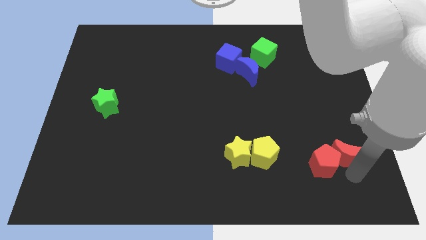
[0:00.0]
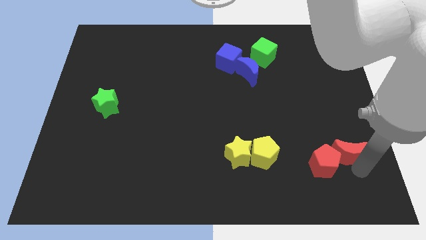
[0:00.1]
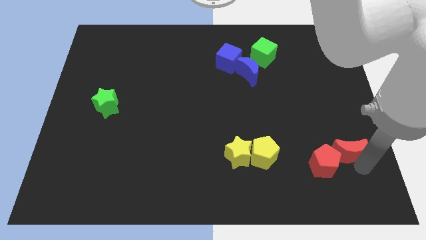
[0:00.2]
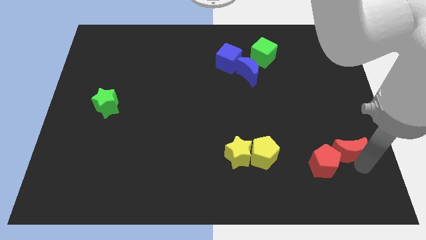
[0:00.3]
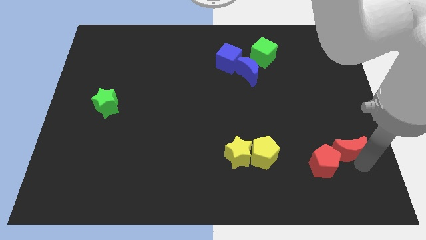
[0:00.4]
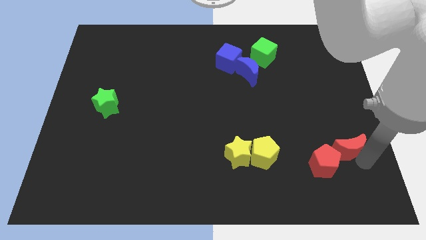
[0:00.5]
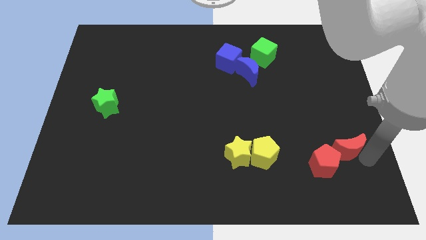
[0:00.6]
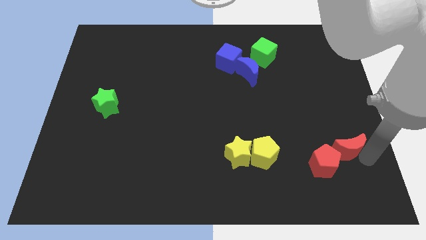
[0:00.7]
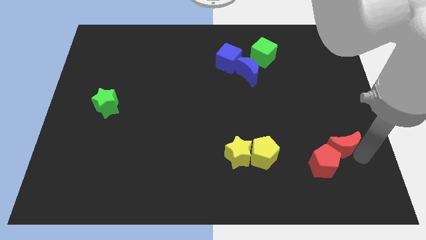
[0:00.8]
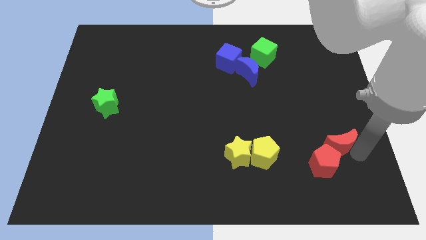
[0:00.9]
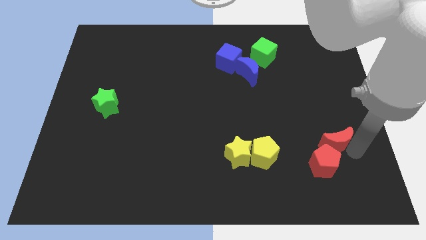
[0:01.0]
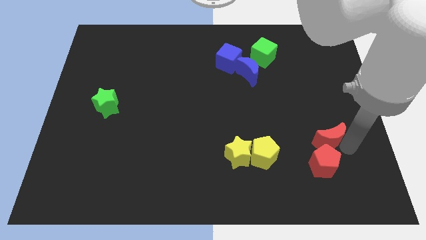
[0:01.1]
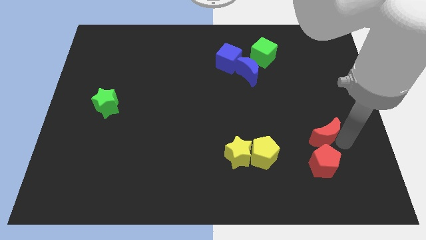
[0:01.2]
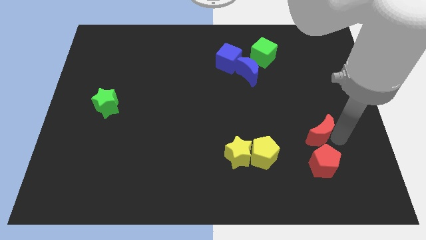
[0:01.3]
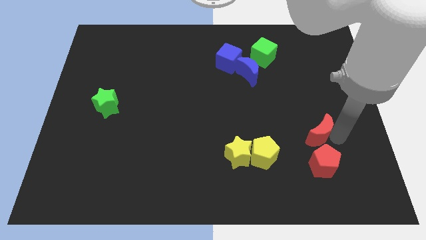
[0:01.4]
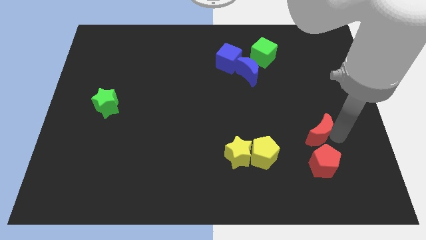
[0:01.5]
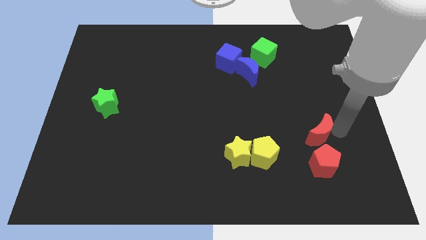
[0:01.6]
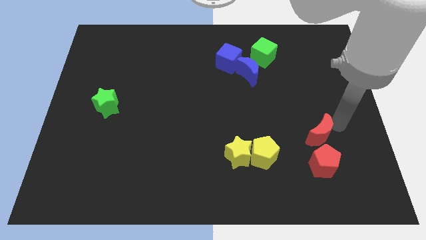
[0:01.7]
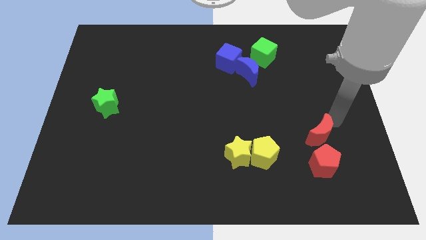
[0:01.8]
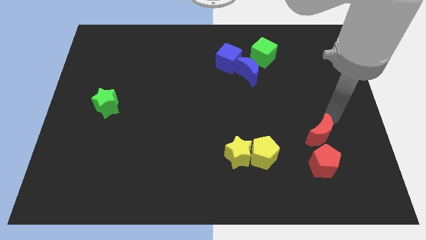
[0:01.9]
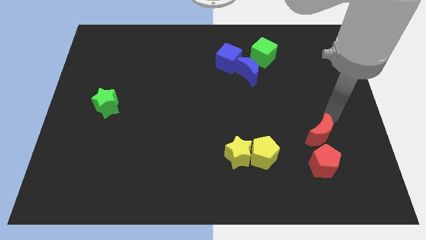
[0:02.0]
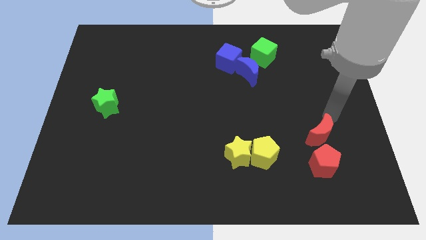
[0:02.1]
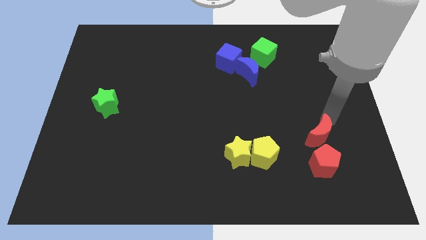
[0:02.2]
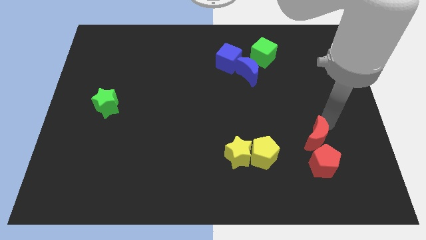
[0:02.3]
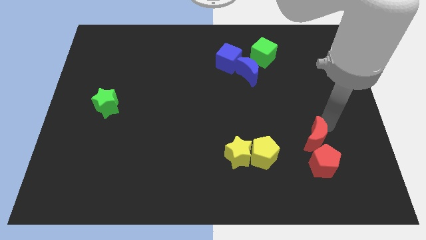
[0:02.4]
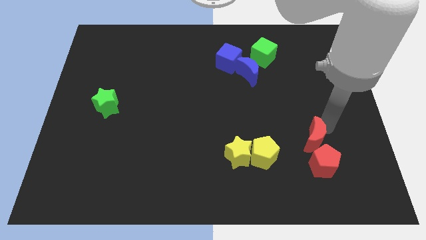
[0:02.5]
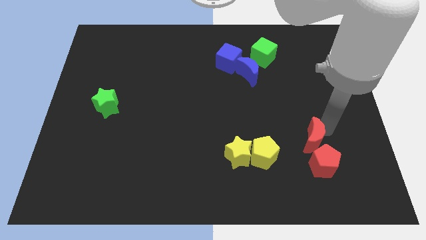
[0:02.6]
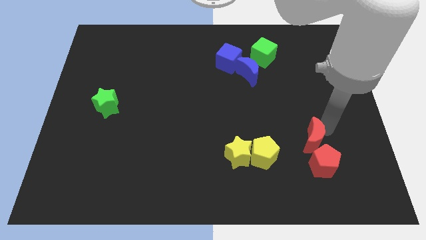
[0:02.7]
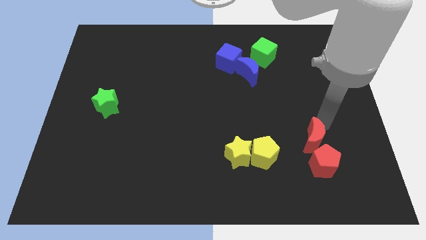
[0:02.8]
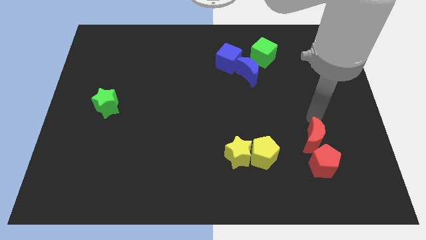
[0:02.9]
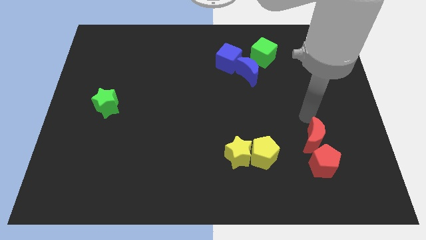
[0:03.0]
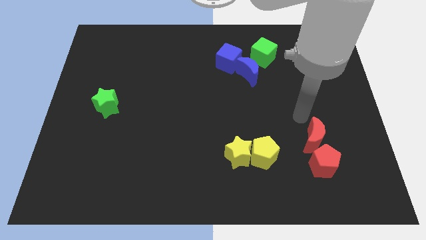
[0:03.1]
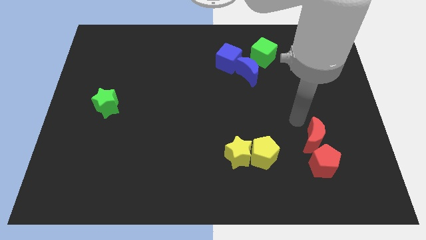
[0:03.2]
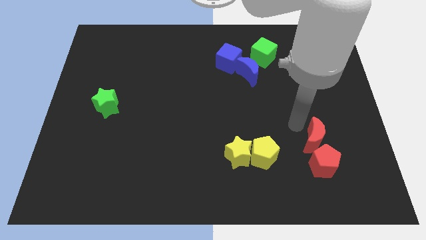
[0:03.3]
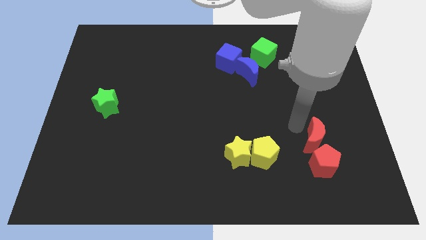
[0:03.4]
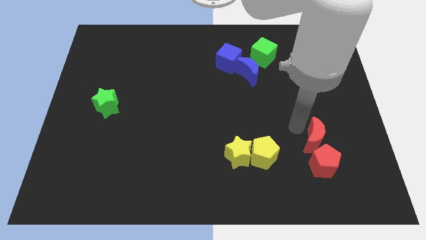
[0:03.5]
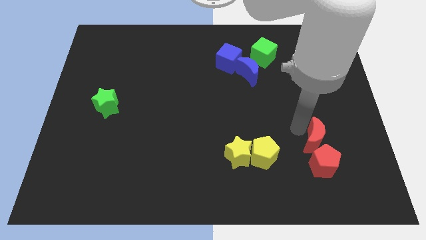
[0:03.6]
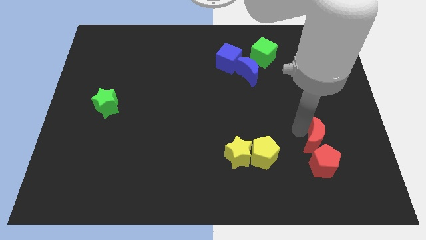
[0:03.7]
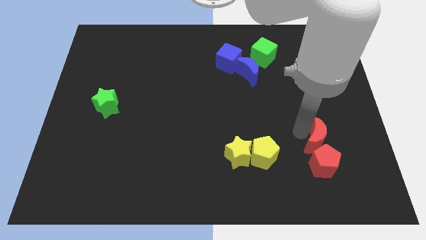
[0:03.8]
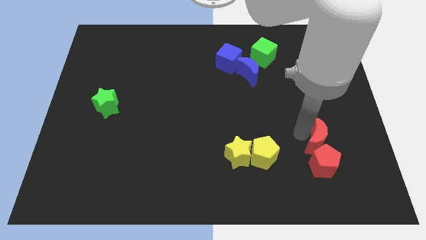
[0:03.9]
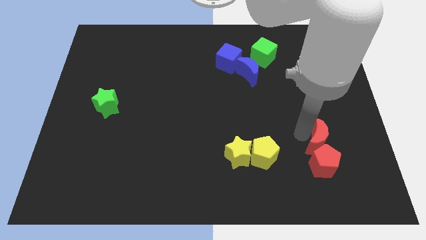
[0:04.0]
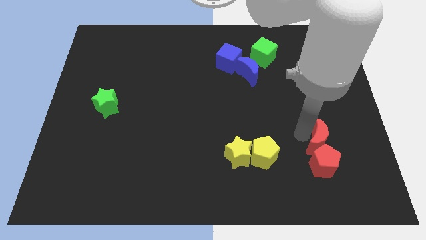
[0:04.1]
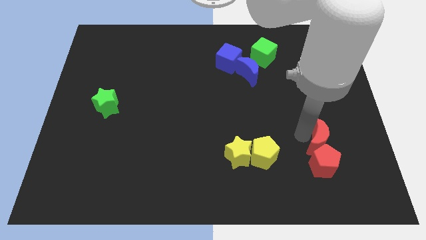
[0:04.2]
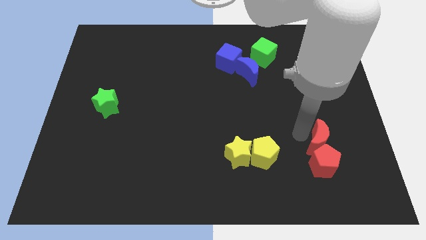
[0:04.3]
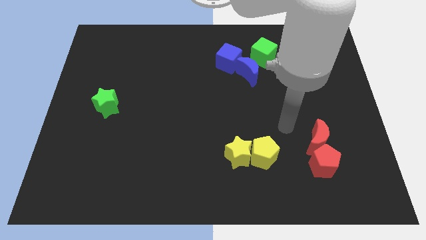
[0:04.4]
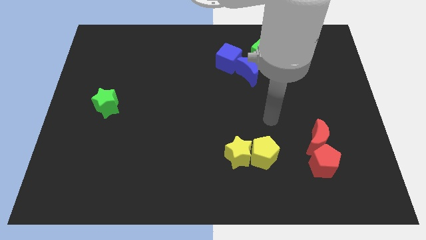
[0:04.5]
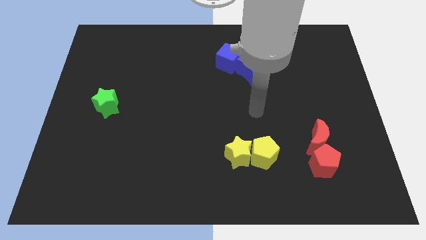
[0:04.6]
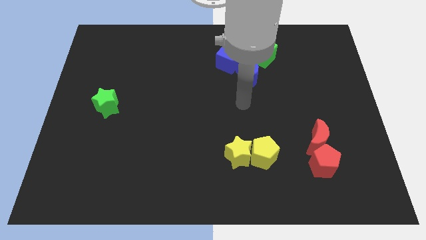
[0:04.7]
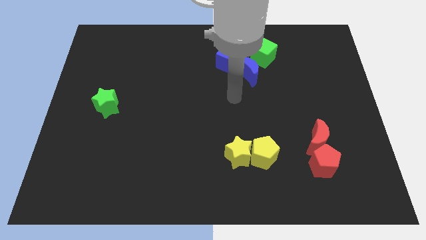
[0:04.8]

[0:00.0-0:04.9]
slightly move the red crescent above to the red pentagon

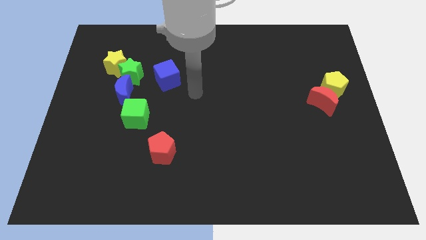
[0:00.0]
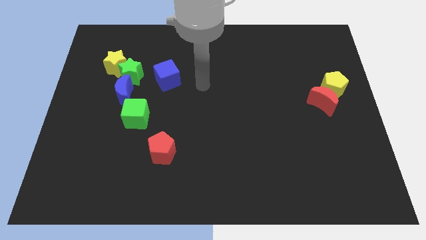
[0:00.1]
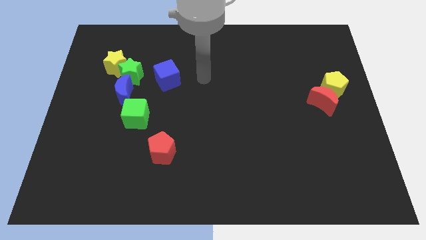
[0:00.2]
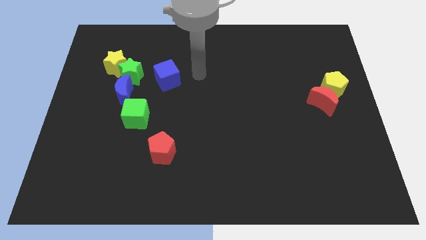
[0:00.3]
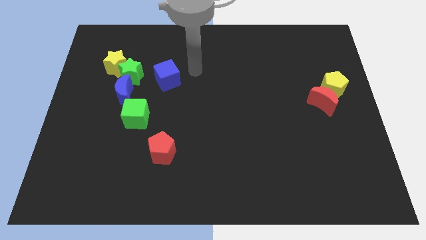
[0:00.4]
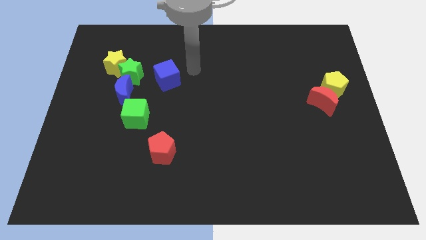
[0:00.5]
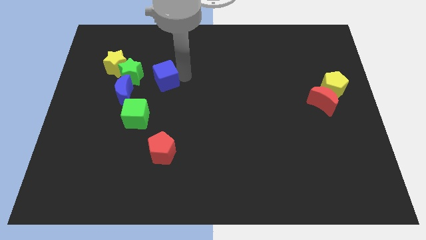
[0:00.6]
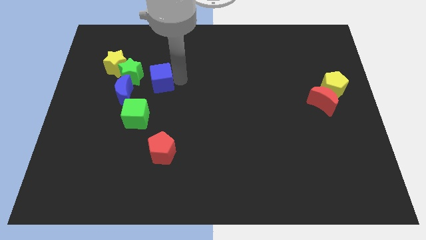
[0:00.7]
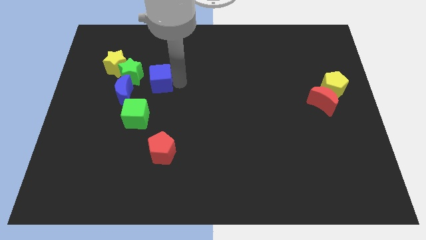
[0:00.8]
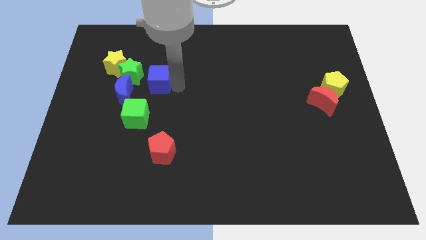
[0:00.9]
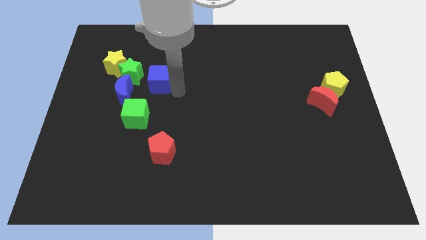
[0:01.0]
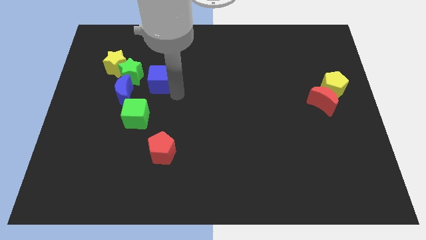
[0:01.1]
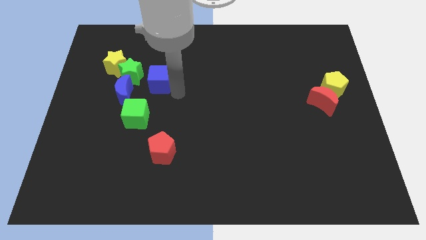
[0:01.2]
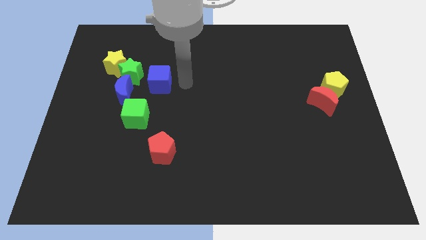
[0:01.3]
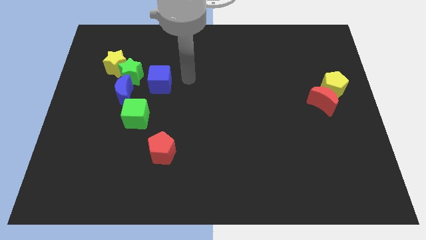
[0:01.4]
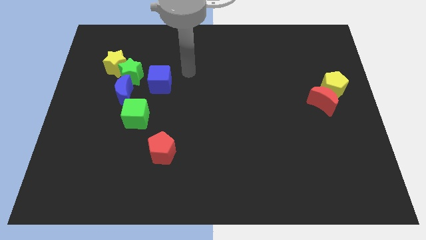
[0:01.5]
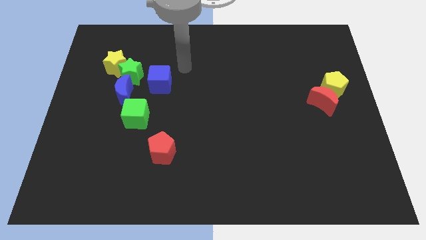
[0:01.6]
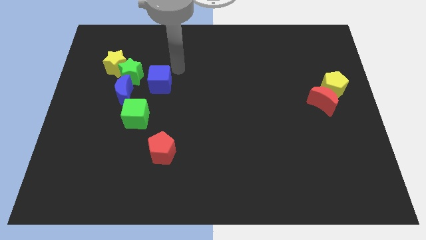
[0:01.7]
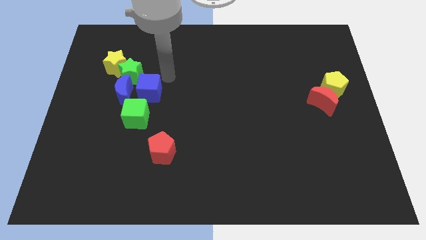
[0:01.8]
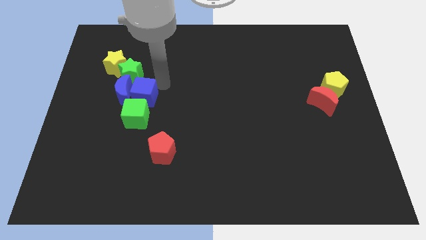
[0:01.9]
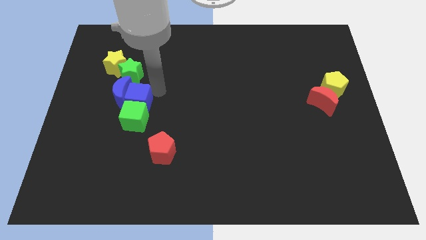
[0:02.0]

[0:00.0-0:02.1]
push the blue cube into the blue moon

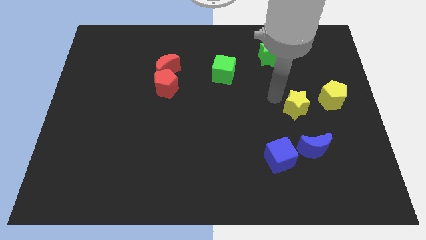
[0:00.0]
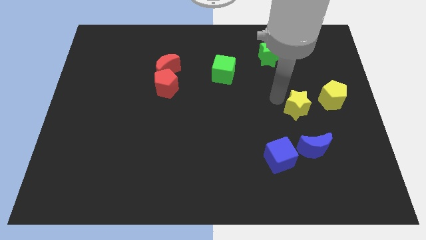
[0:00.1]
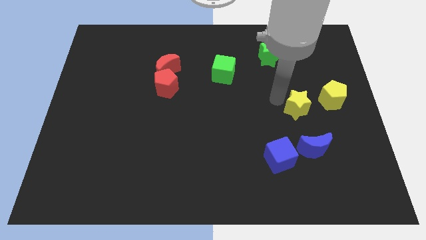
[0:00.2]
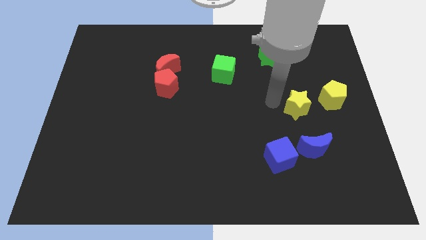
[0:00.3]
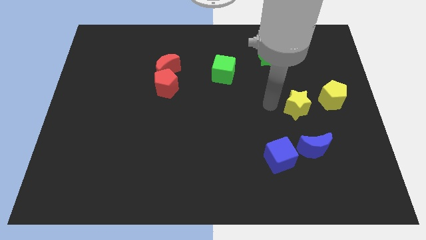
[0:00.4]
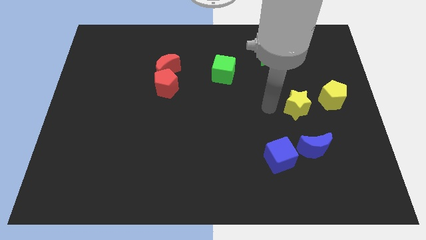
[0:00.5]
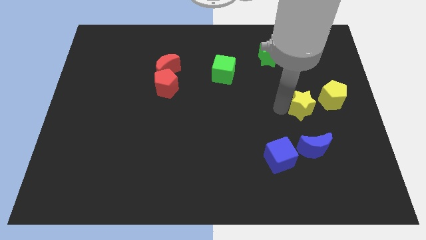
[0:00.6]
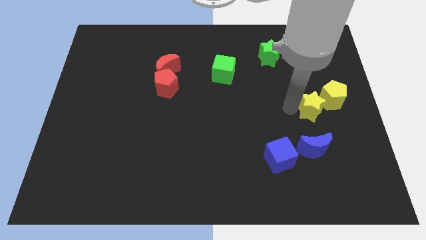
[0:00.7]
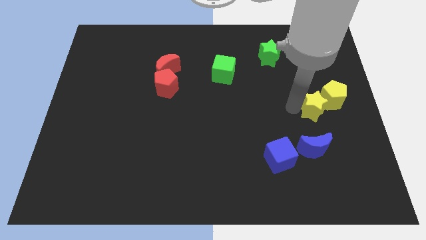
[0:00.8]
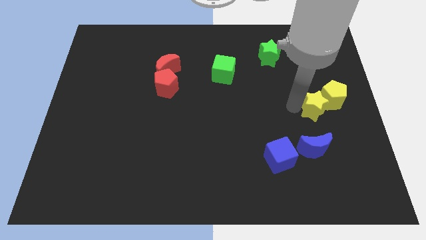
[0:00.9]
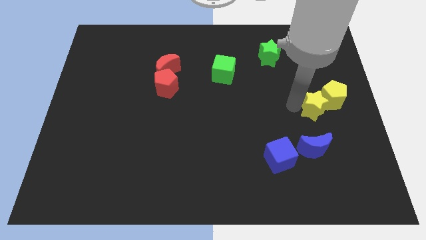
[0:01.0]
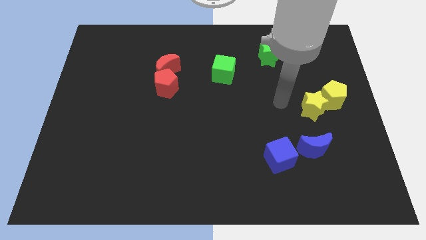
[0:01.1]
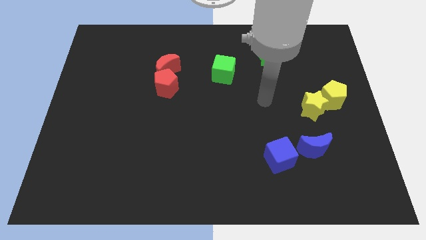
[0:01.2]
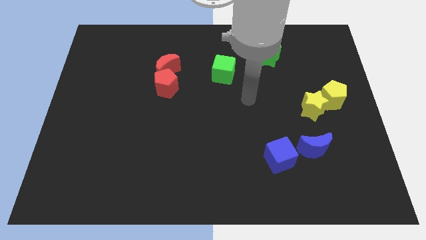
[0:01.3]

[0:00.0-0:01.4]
move the yellow star towards the yellow pentagon to the center right

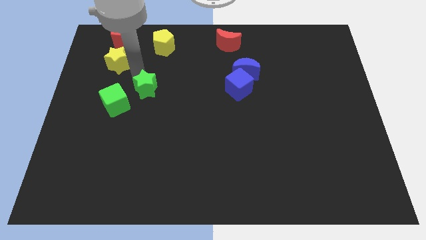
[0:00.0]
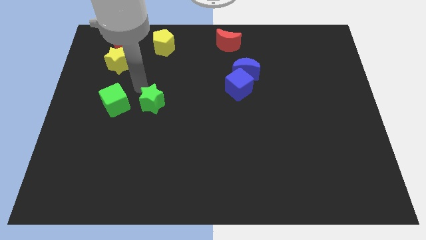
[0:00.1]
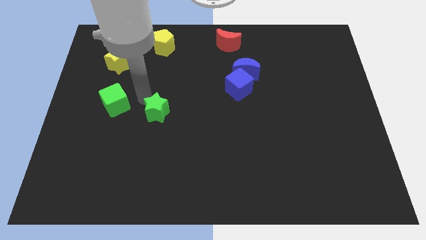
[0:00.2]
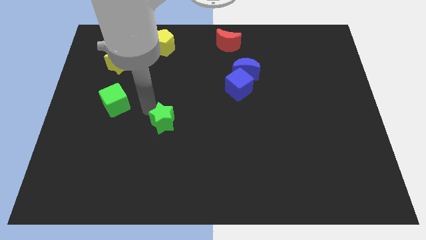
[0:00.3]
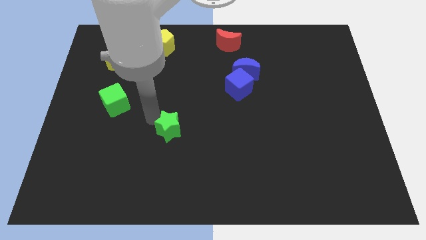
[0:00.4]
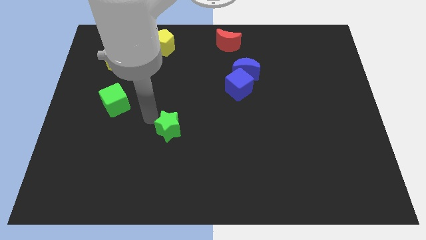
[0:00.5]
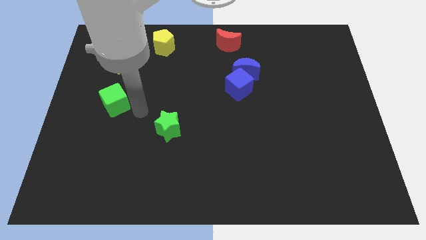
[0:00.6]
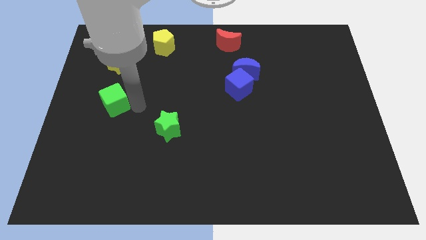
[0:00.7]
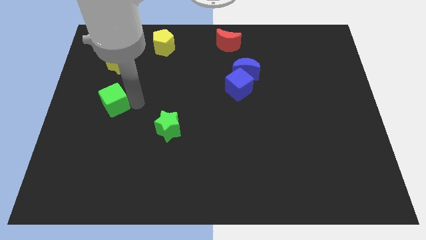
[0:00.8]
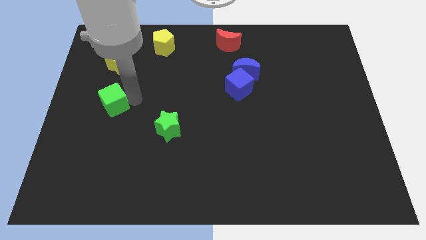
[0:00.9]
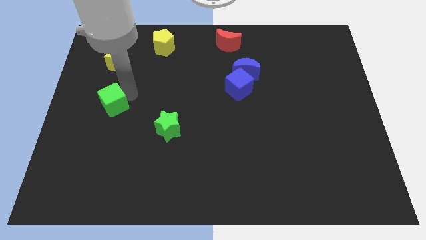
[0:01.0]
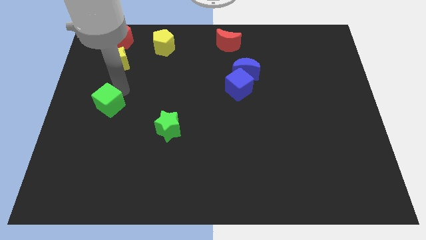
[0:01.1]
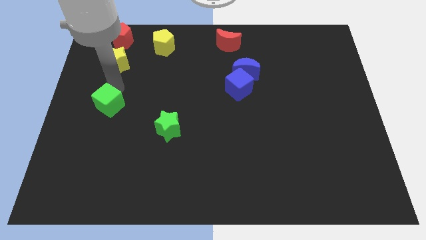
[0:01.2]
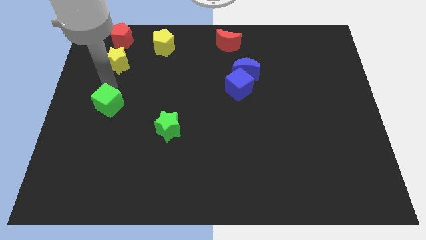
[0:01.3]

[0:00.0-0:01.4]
move the green star slightly down
